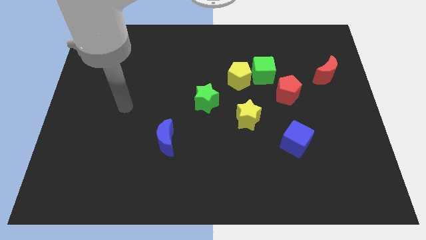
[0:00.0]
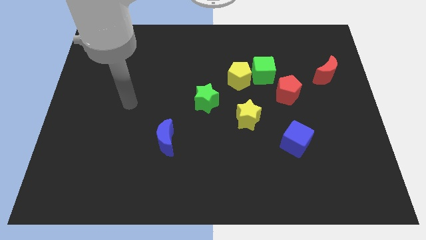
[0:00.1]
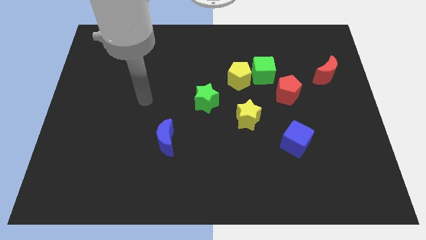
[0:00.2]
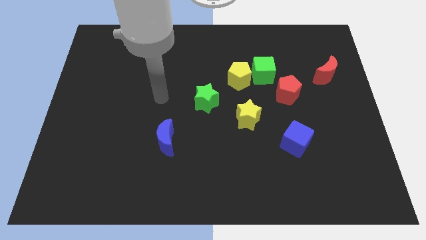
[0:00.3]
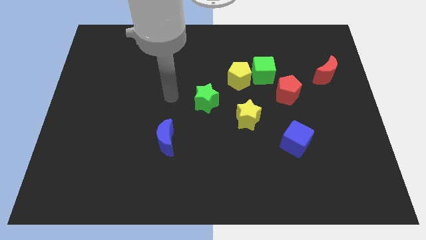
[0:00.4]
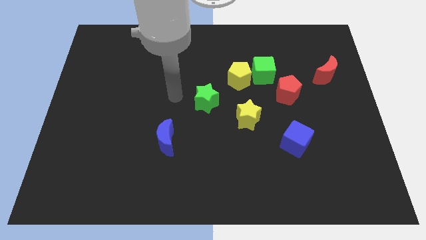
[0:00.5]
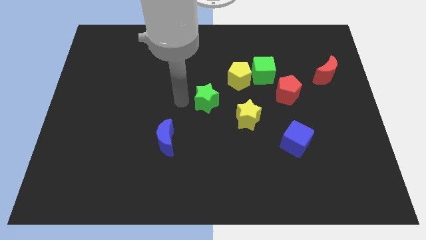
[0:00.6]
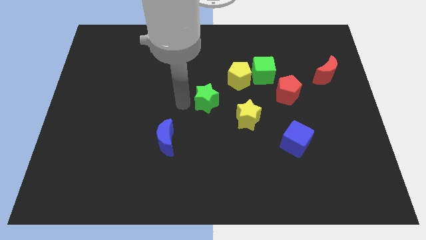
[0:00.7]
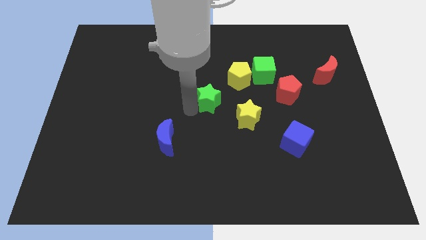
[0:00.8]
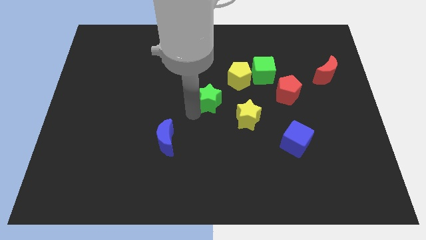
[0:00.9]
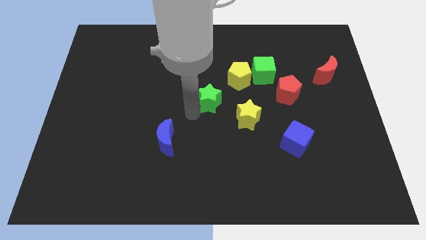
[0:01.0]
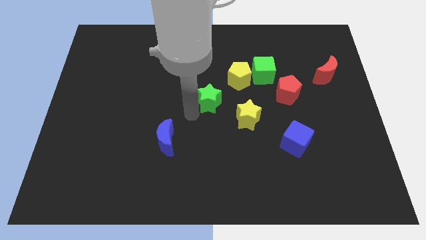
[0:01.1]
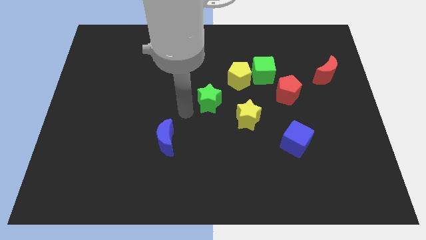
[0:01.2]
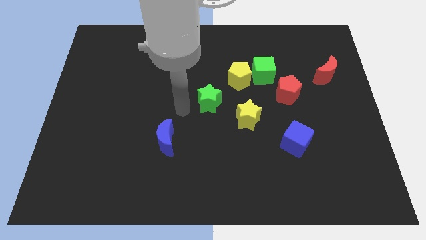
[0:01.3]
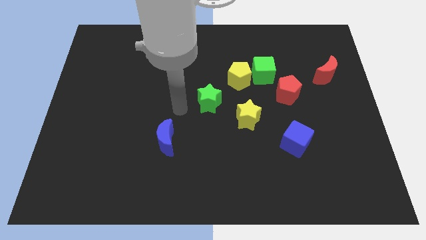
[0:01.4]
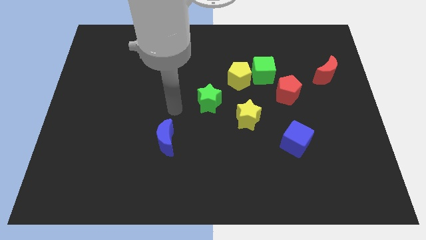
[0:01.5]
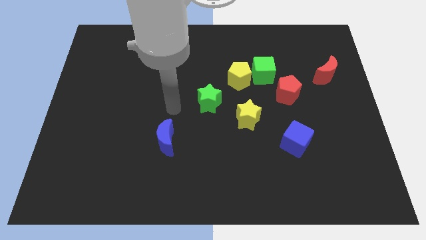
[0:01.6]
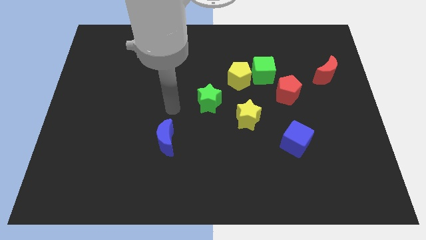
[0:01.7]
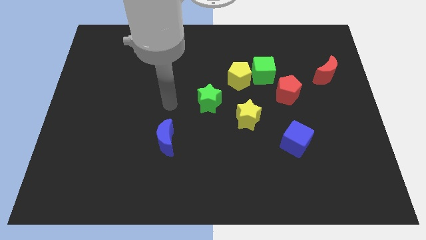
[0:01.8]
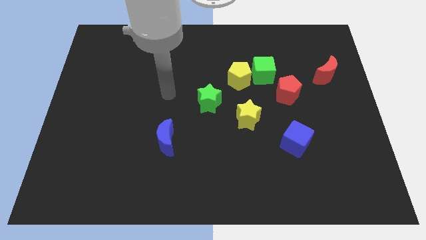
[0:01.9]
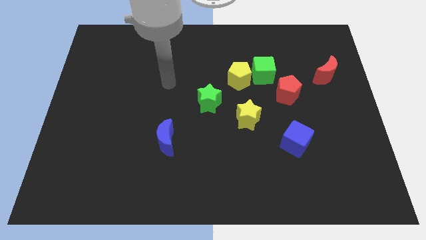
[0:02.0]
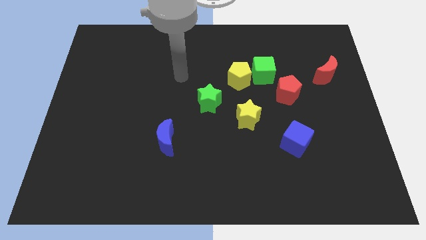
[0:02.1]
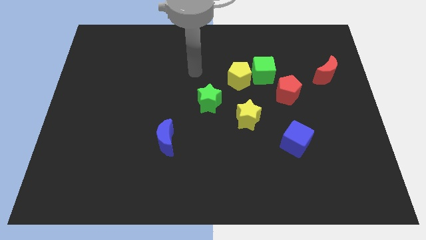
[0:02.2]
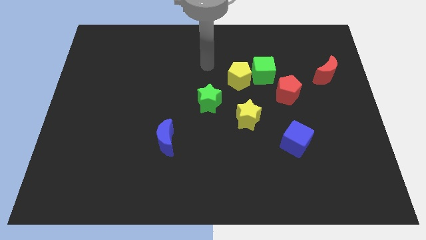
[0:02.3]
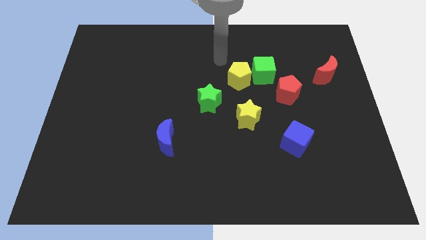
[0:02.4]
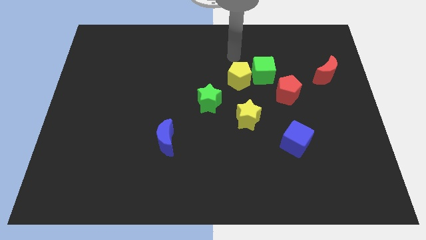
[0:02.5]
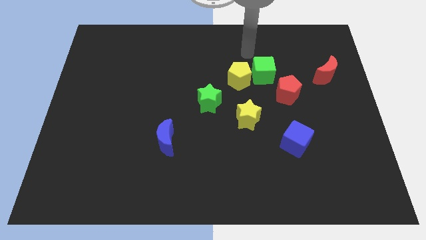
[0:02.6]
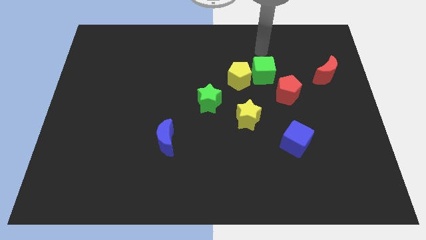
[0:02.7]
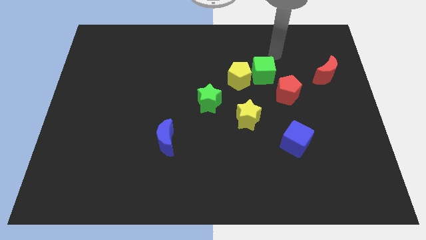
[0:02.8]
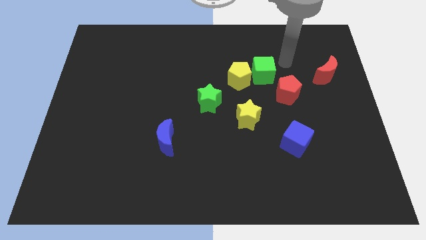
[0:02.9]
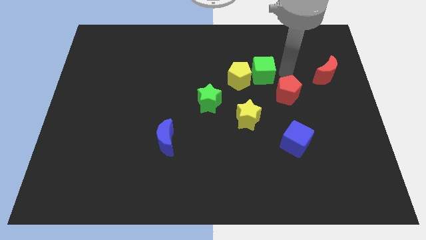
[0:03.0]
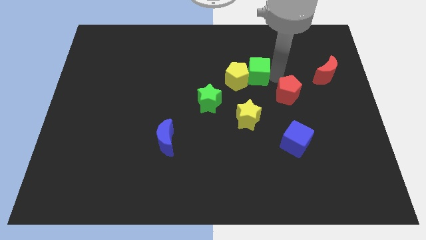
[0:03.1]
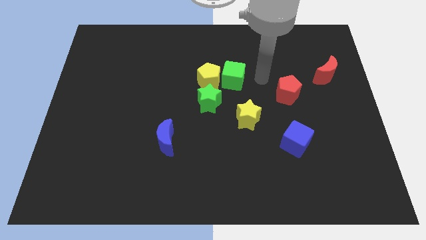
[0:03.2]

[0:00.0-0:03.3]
move your arm towards the green star

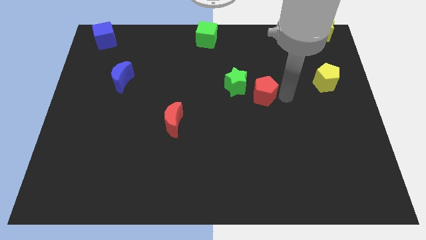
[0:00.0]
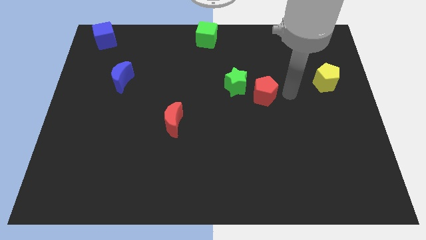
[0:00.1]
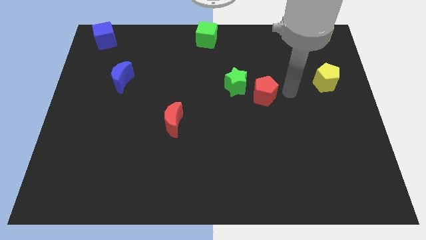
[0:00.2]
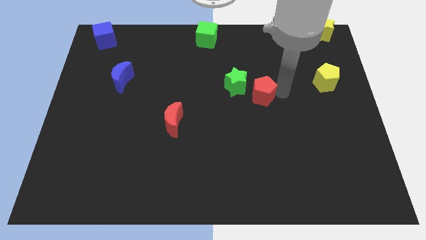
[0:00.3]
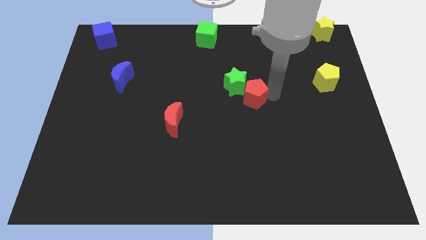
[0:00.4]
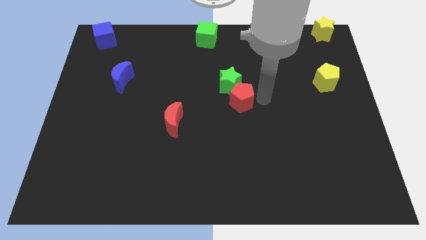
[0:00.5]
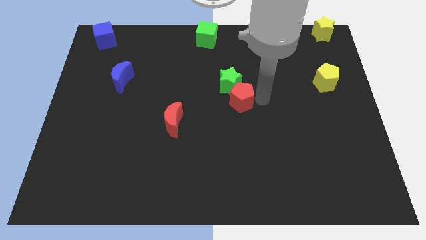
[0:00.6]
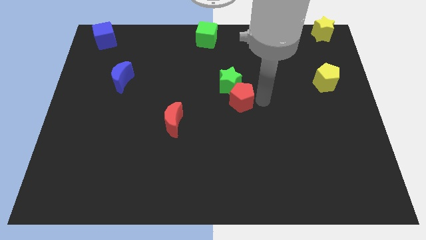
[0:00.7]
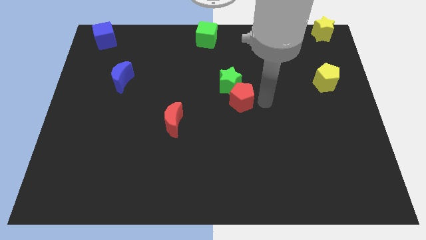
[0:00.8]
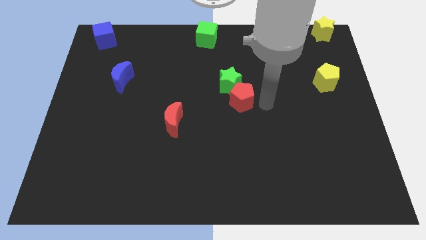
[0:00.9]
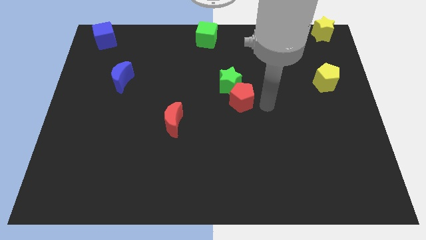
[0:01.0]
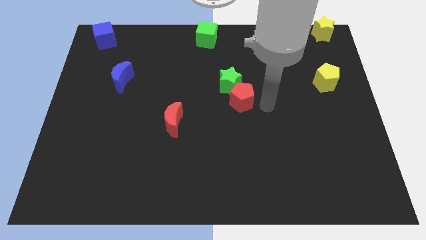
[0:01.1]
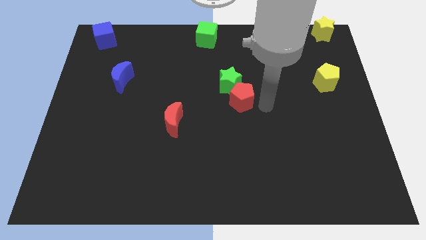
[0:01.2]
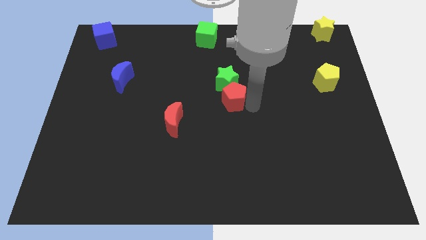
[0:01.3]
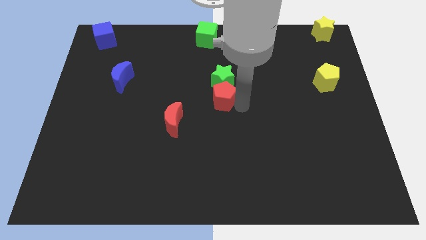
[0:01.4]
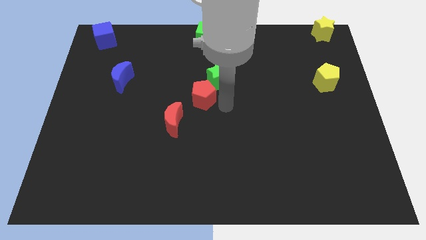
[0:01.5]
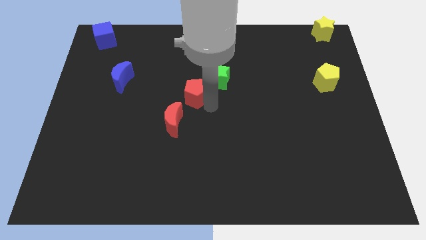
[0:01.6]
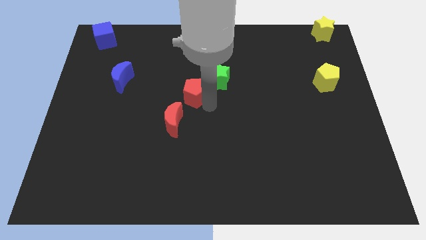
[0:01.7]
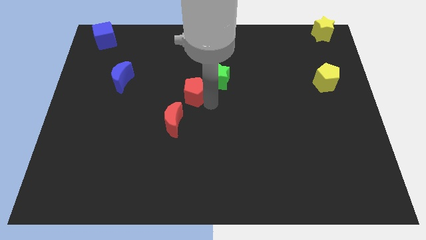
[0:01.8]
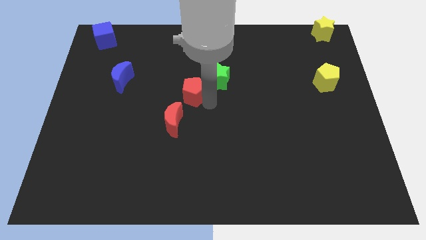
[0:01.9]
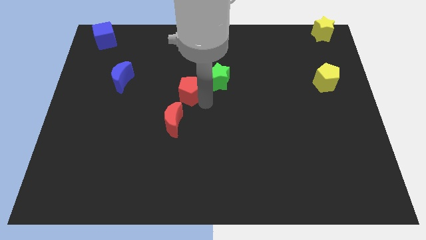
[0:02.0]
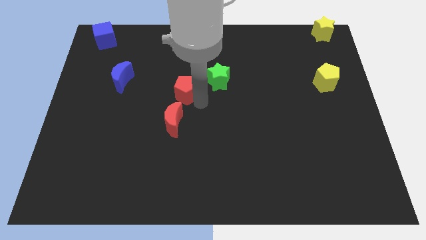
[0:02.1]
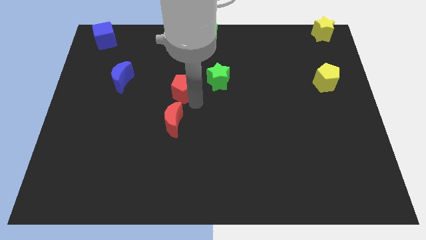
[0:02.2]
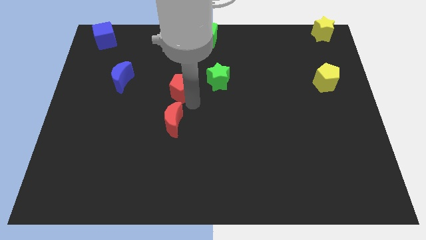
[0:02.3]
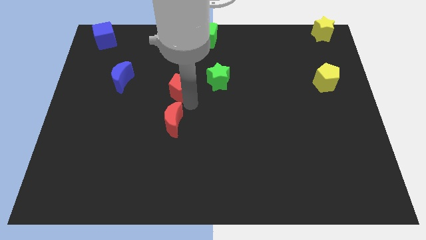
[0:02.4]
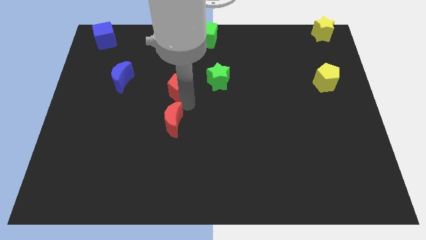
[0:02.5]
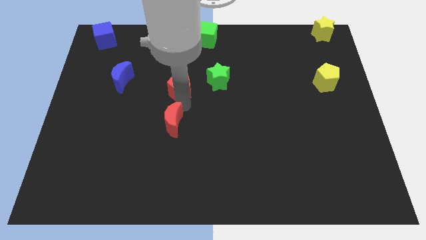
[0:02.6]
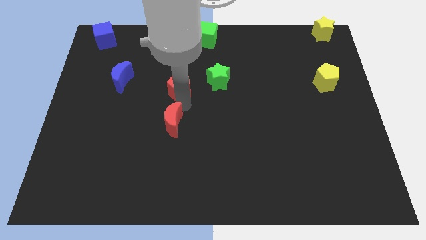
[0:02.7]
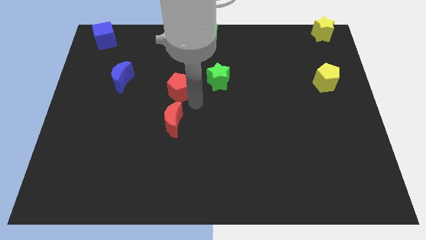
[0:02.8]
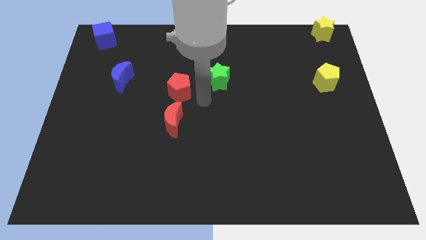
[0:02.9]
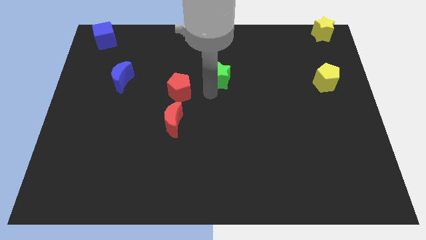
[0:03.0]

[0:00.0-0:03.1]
place the red pentagon above the red crescent

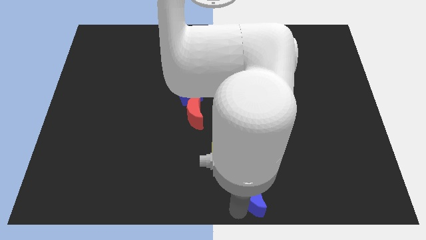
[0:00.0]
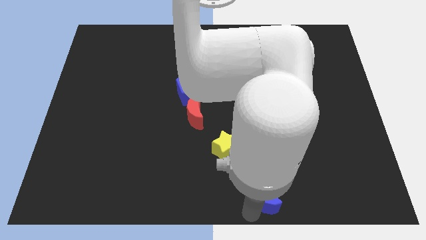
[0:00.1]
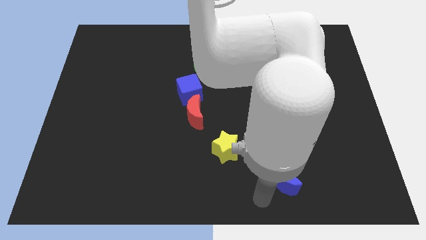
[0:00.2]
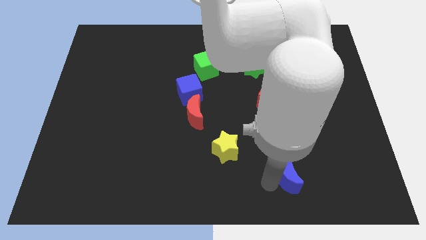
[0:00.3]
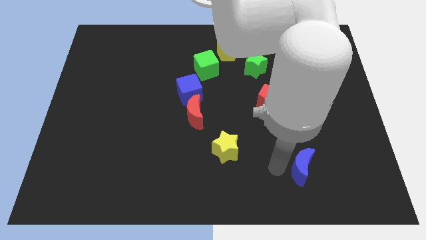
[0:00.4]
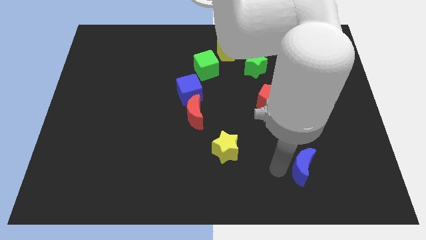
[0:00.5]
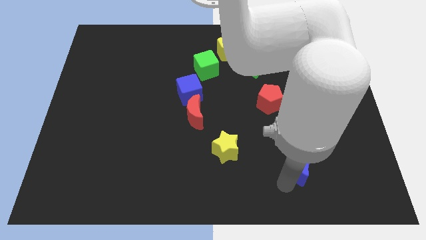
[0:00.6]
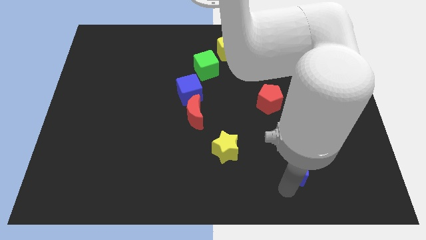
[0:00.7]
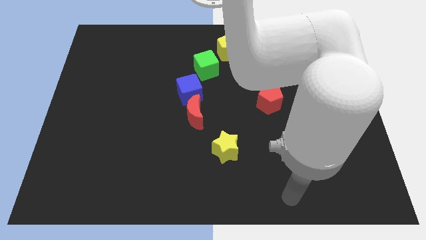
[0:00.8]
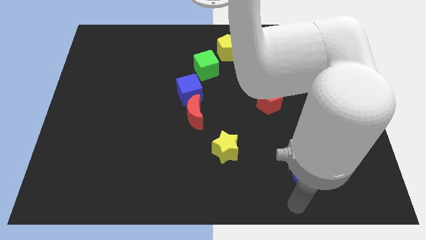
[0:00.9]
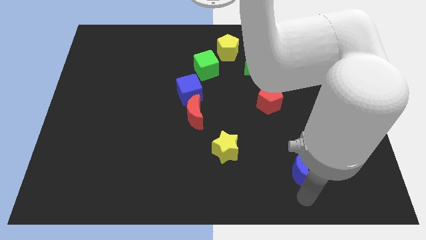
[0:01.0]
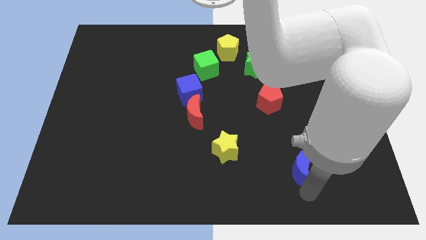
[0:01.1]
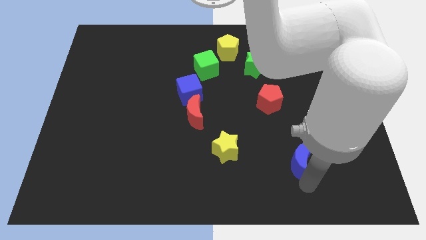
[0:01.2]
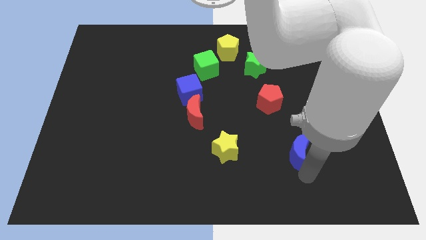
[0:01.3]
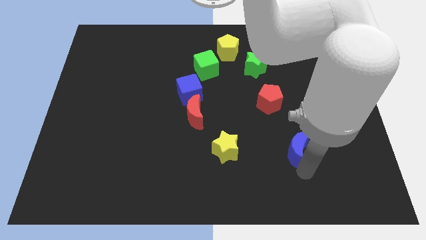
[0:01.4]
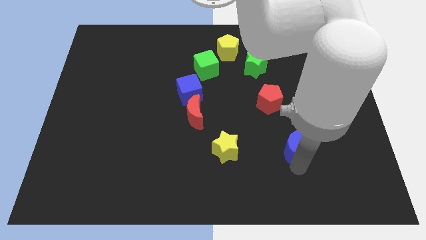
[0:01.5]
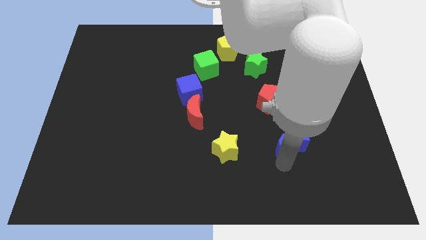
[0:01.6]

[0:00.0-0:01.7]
place blue moon to the right of yellow star

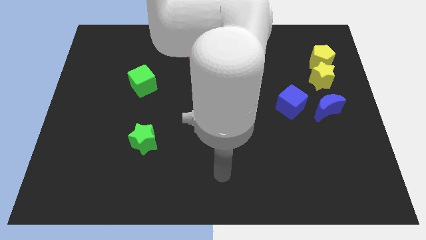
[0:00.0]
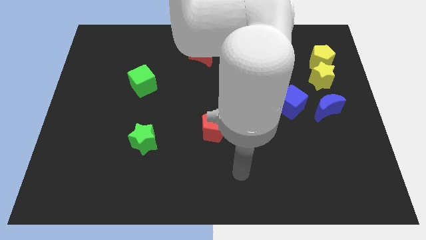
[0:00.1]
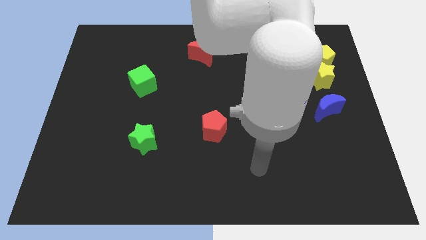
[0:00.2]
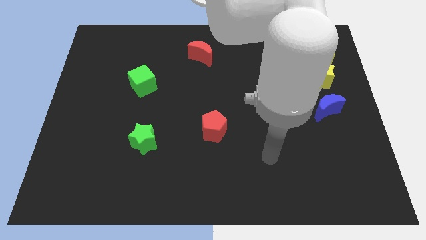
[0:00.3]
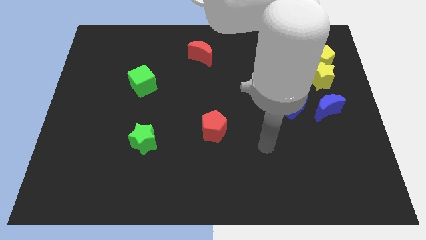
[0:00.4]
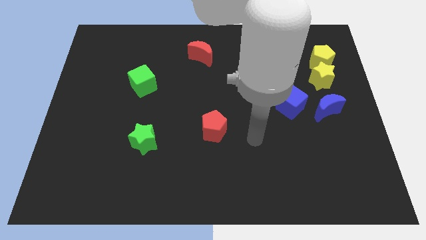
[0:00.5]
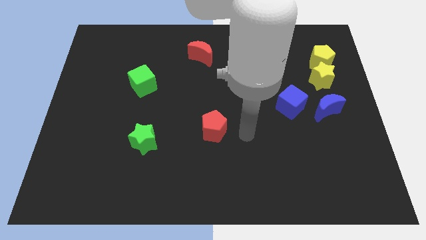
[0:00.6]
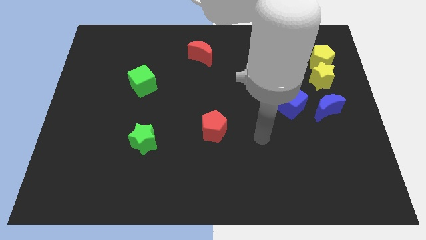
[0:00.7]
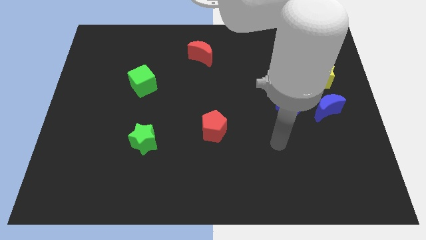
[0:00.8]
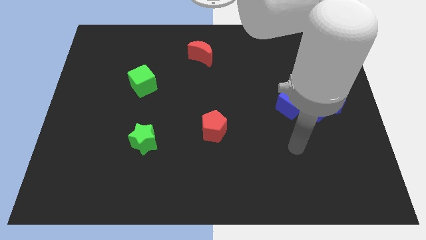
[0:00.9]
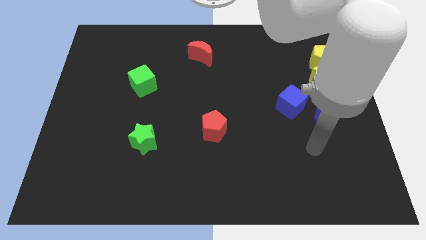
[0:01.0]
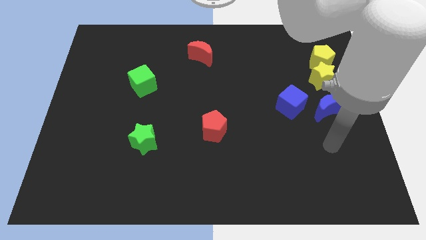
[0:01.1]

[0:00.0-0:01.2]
move the arm to the right side of the red pentagon
